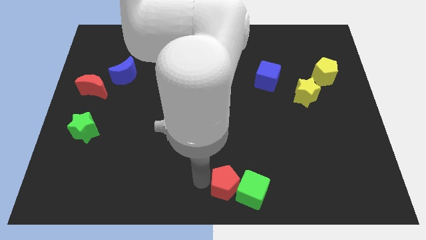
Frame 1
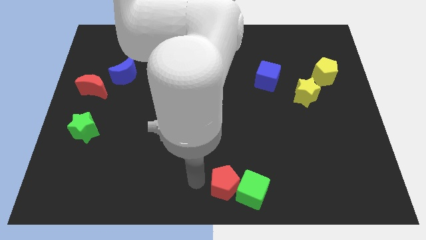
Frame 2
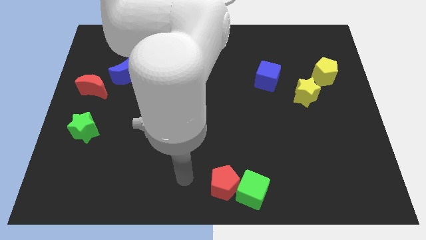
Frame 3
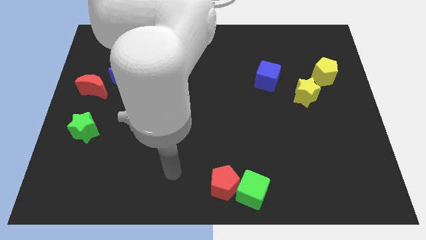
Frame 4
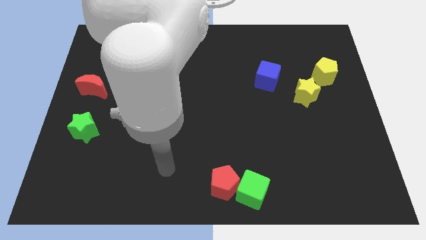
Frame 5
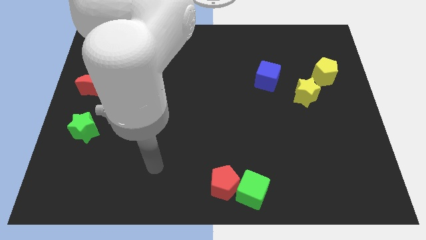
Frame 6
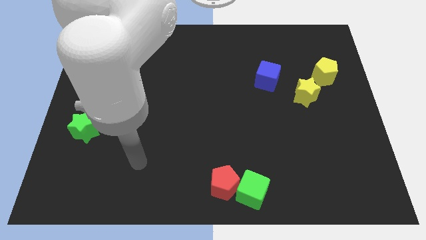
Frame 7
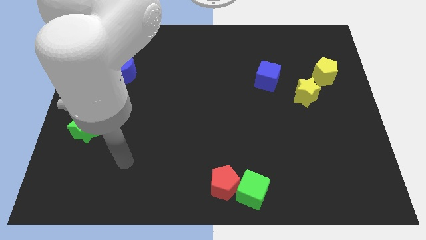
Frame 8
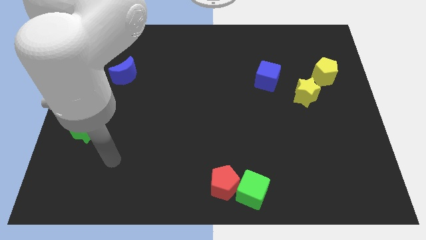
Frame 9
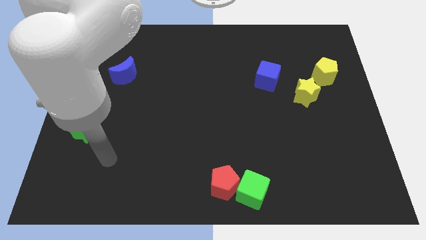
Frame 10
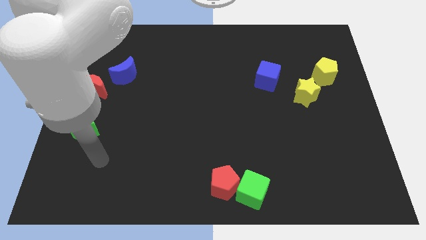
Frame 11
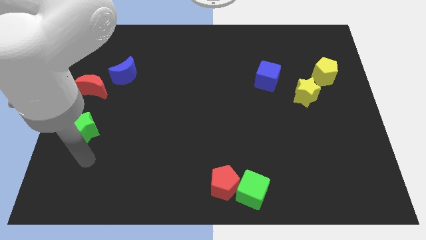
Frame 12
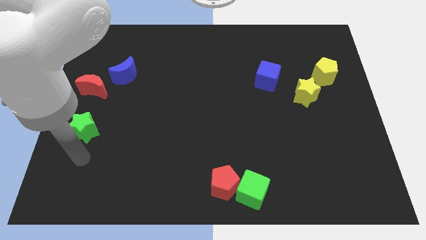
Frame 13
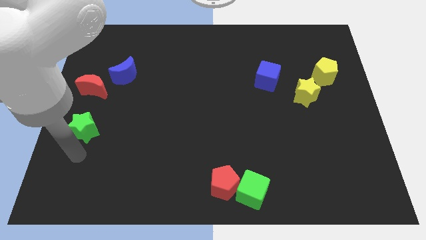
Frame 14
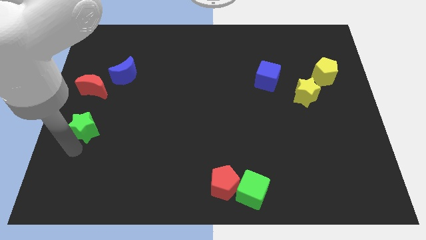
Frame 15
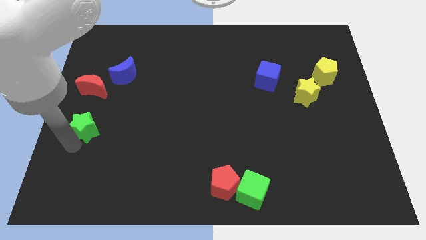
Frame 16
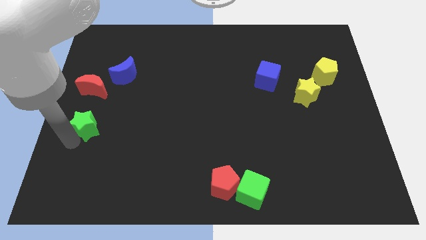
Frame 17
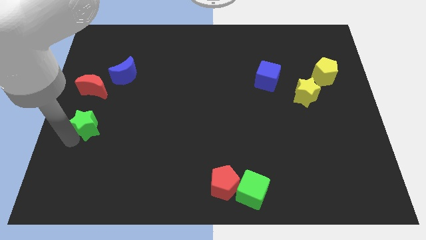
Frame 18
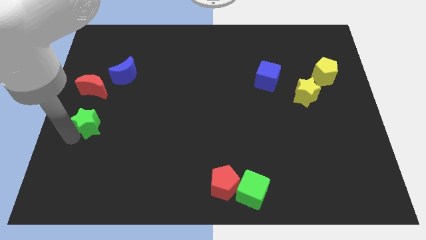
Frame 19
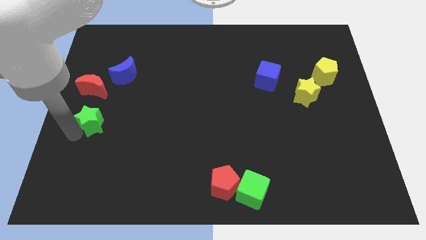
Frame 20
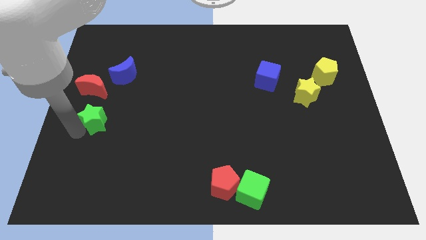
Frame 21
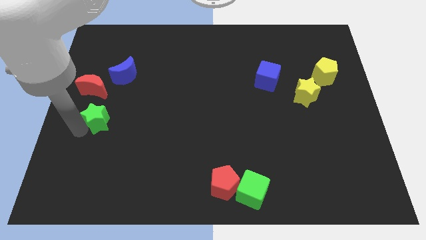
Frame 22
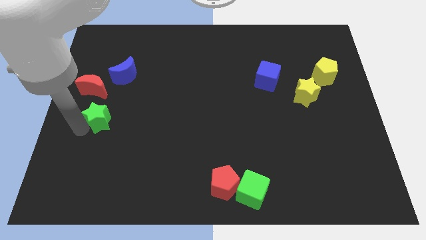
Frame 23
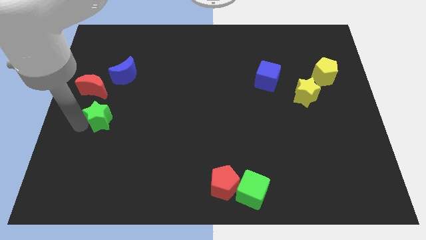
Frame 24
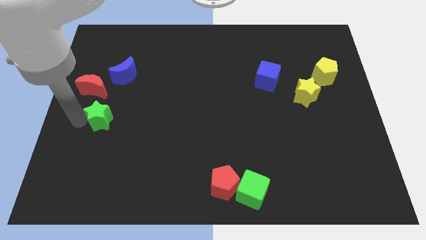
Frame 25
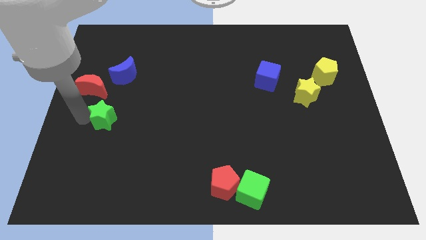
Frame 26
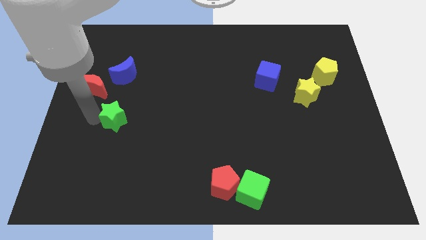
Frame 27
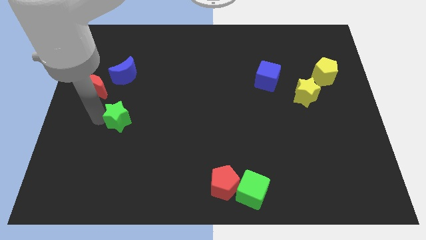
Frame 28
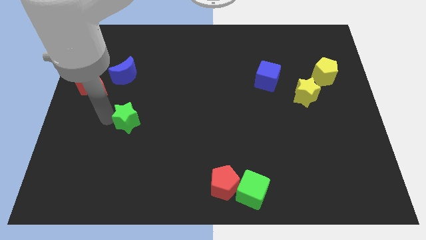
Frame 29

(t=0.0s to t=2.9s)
push the green star below to the blue crescent

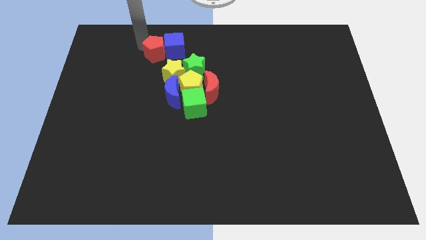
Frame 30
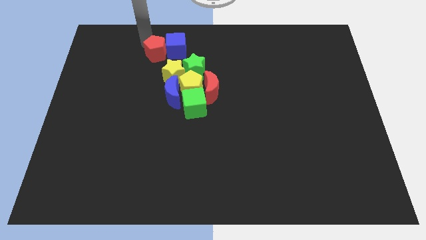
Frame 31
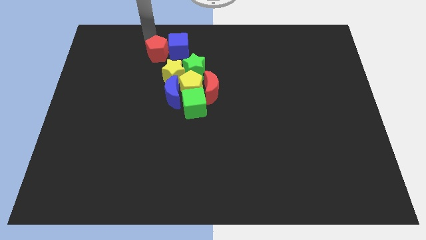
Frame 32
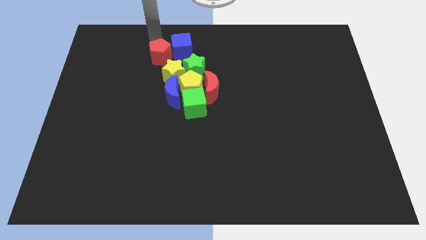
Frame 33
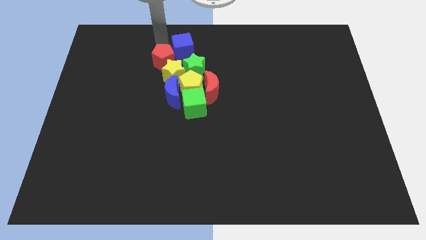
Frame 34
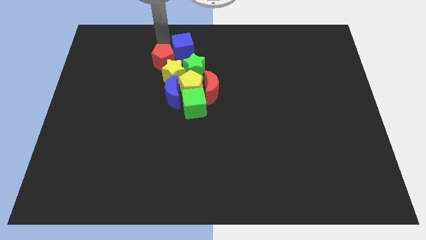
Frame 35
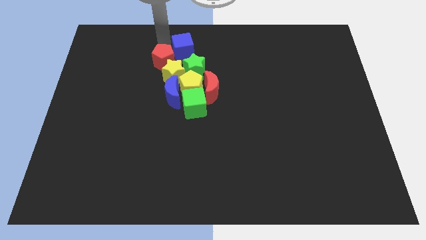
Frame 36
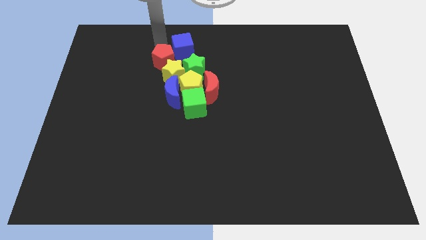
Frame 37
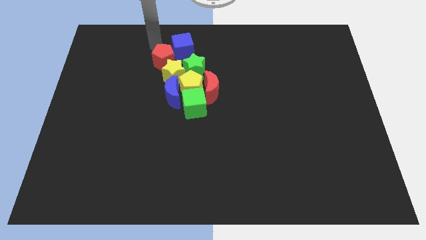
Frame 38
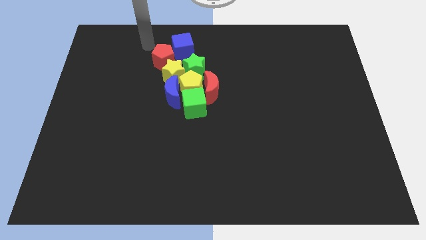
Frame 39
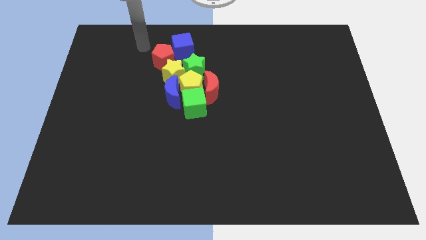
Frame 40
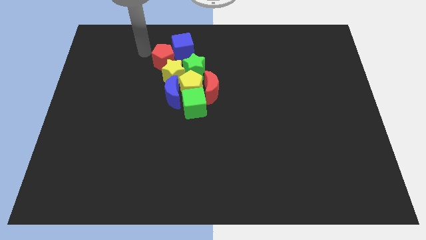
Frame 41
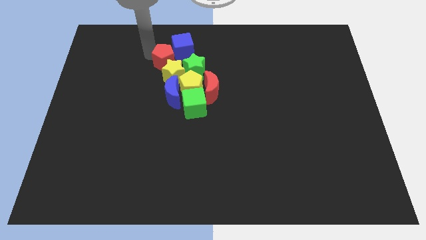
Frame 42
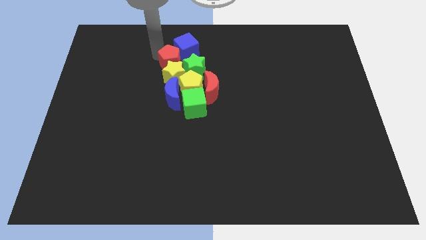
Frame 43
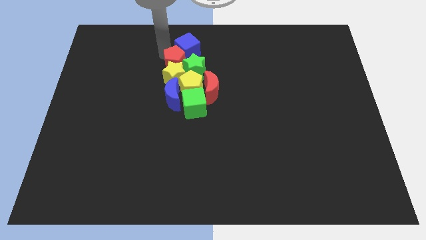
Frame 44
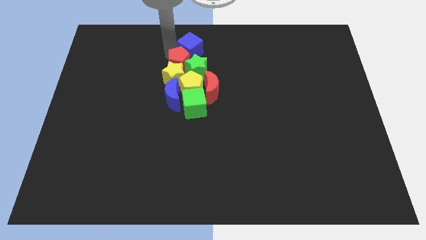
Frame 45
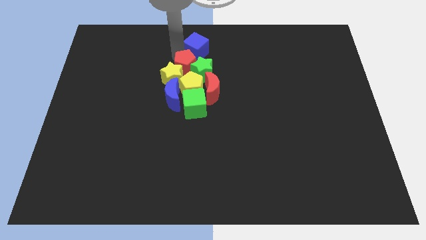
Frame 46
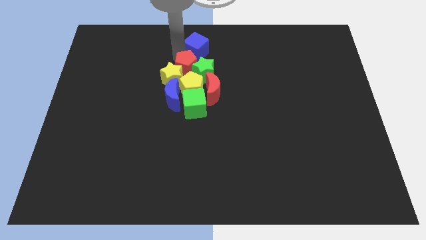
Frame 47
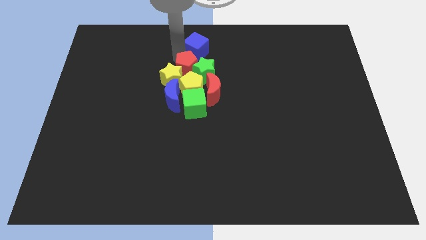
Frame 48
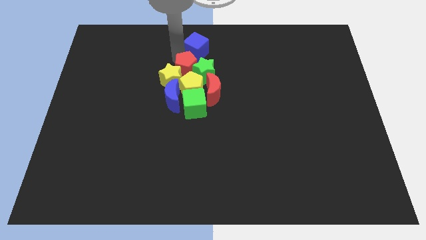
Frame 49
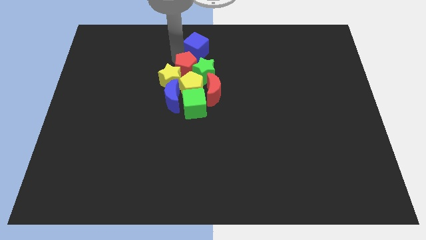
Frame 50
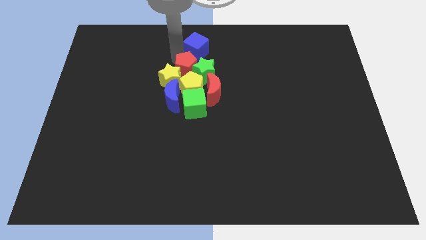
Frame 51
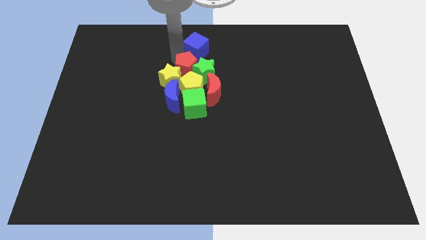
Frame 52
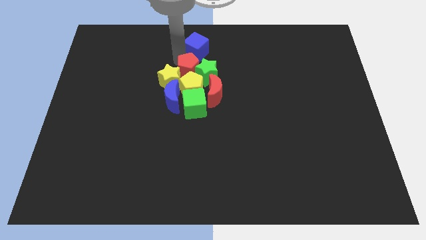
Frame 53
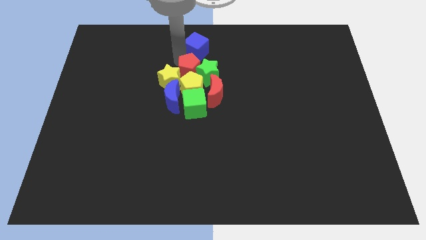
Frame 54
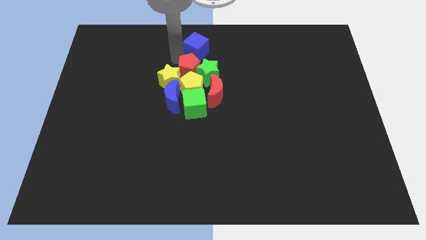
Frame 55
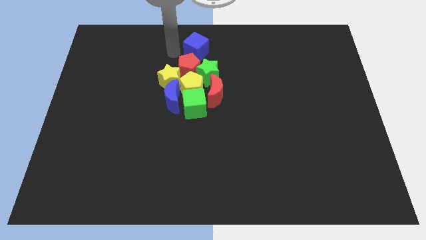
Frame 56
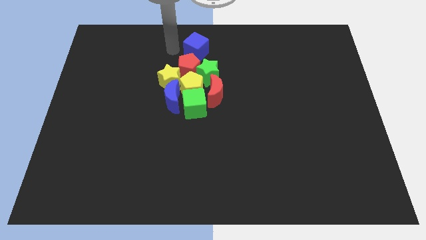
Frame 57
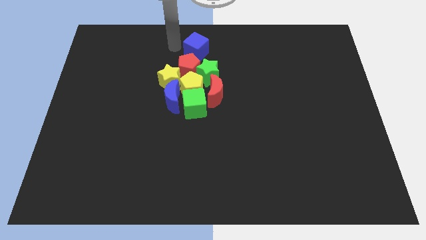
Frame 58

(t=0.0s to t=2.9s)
push the red crescent in between the blue cube and yellow pentagon

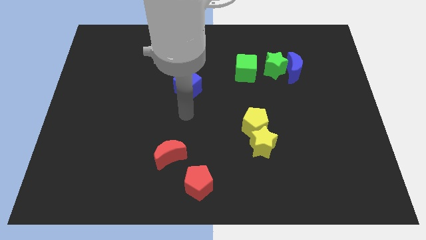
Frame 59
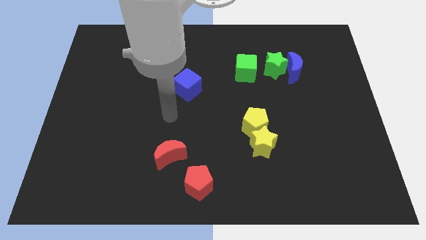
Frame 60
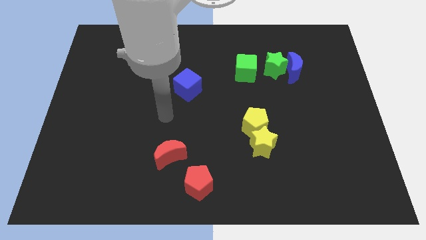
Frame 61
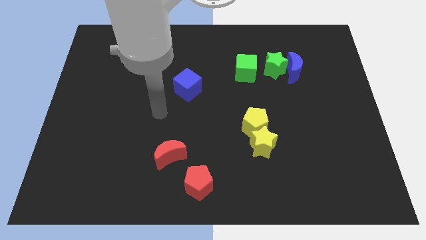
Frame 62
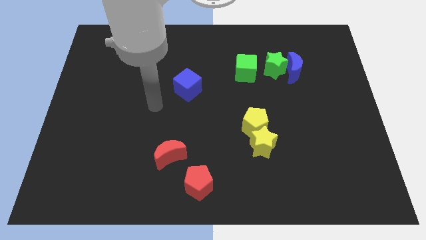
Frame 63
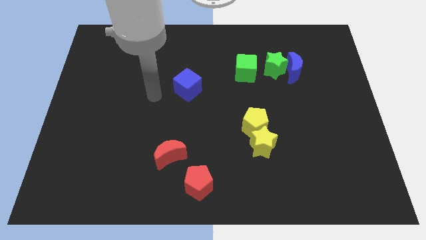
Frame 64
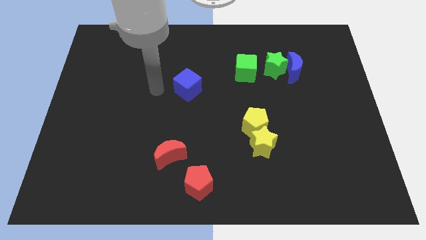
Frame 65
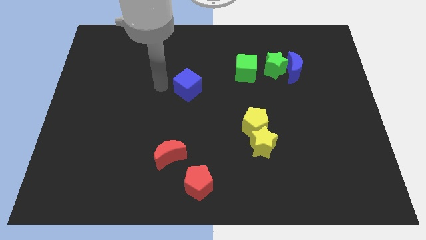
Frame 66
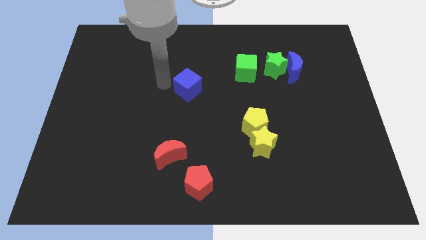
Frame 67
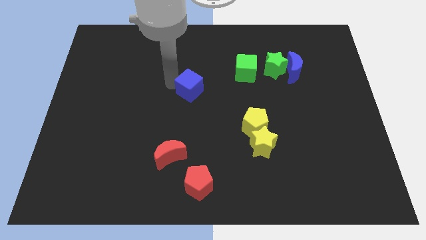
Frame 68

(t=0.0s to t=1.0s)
tap the blue cube

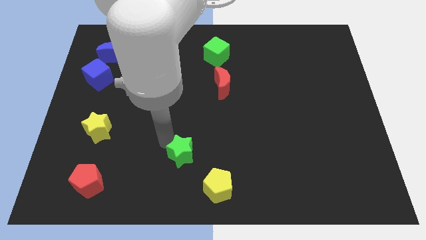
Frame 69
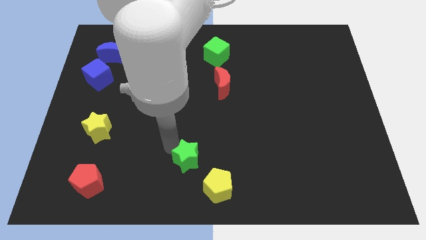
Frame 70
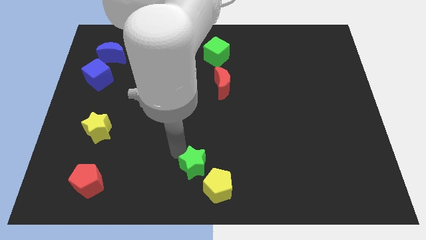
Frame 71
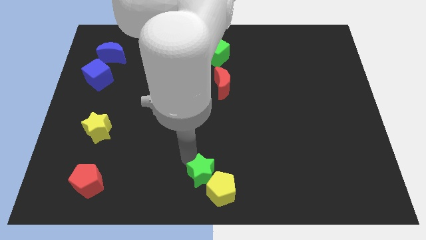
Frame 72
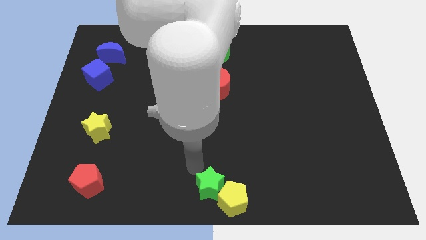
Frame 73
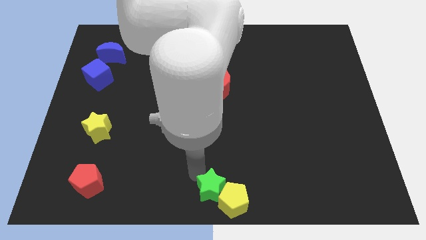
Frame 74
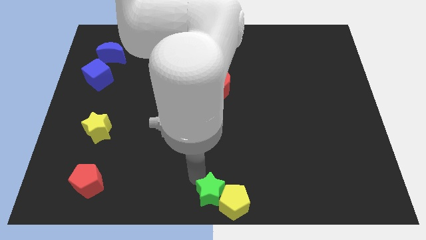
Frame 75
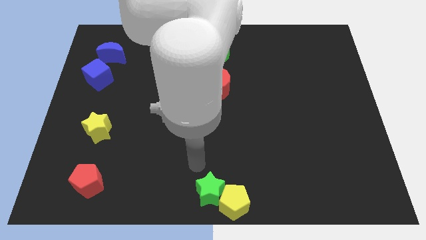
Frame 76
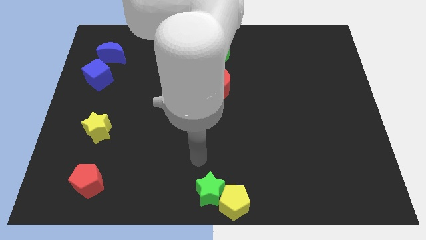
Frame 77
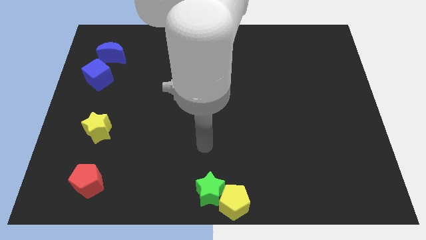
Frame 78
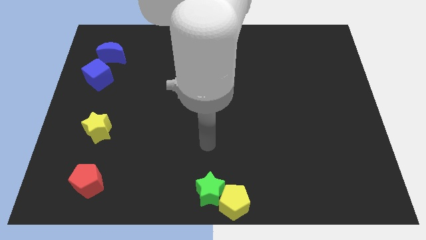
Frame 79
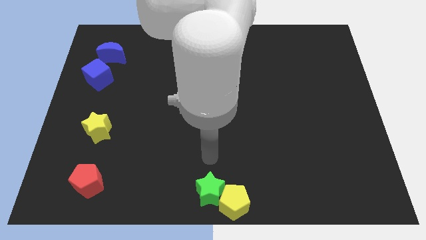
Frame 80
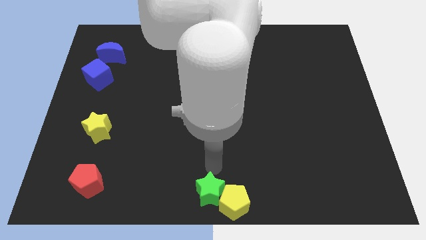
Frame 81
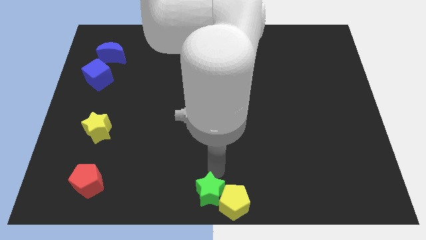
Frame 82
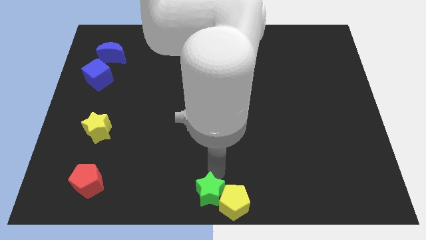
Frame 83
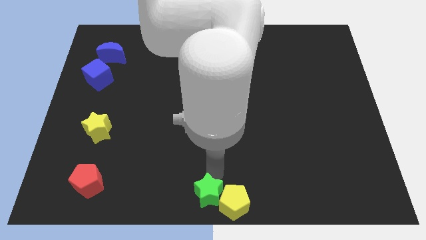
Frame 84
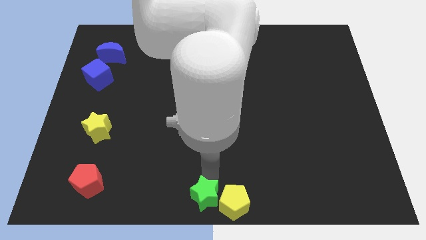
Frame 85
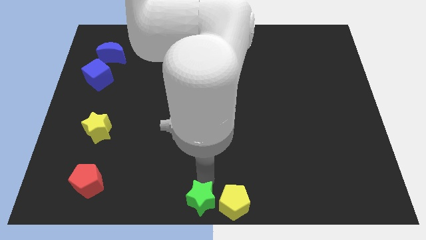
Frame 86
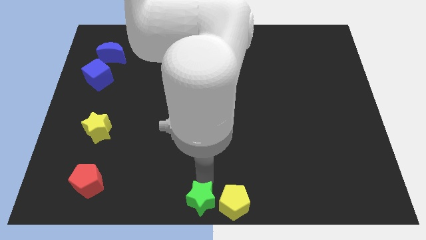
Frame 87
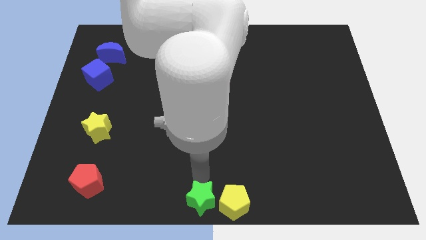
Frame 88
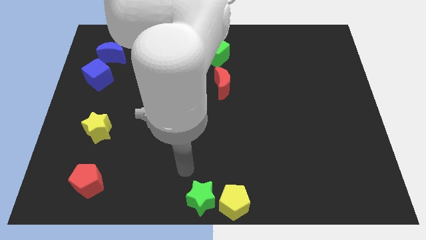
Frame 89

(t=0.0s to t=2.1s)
push the green star and place it beside the yellow pentagon
